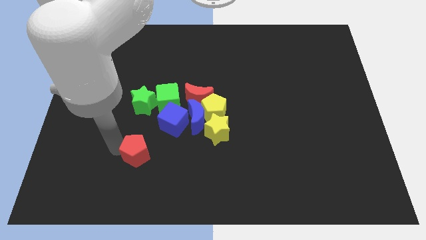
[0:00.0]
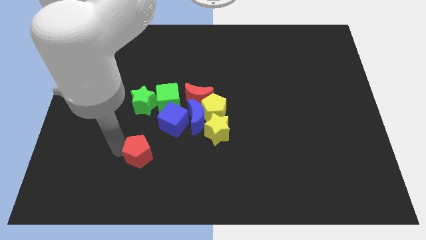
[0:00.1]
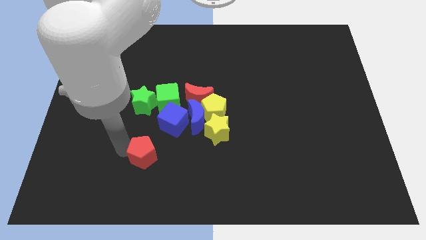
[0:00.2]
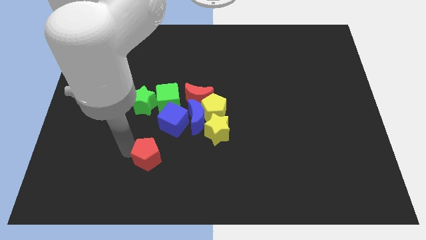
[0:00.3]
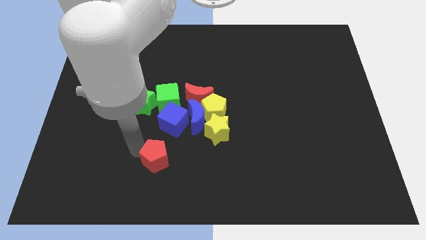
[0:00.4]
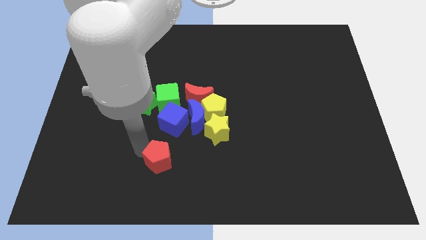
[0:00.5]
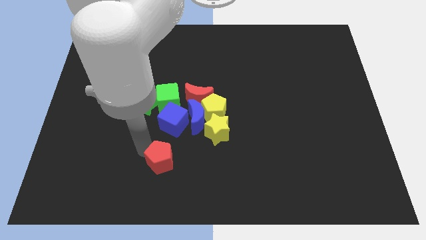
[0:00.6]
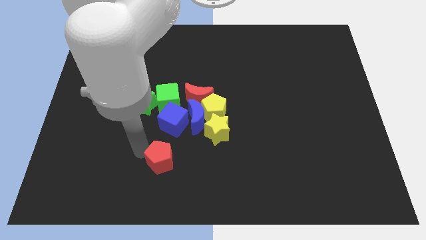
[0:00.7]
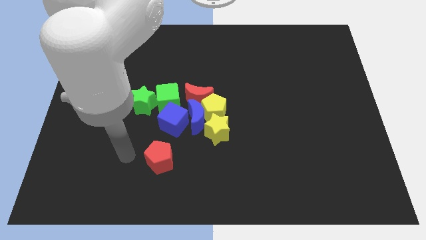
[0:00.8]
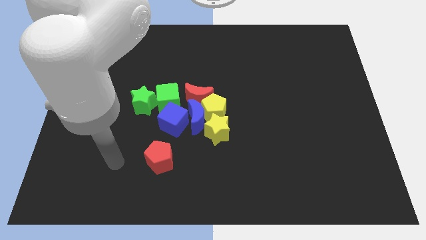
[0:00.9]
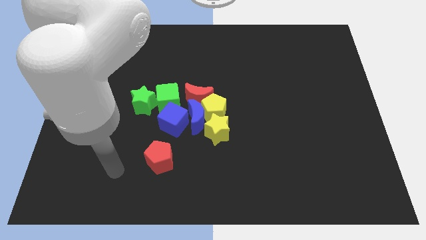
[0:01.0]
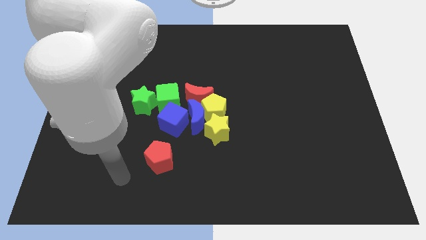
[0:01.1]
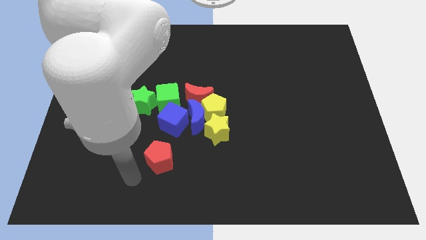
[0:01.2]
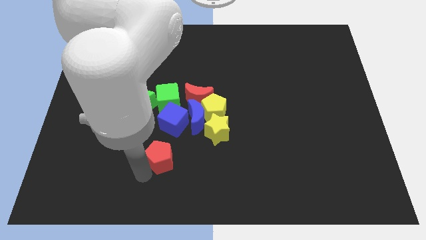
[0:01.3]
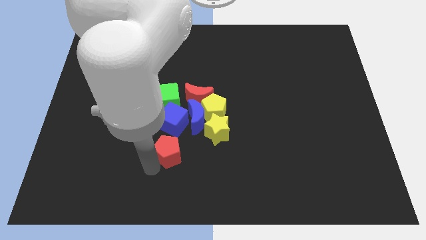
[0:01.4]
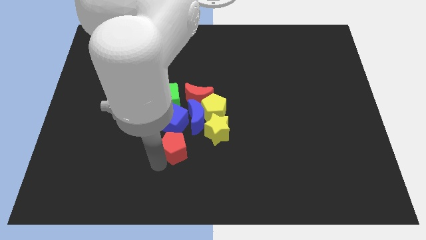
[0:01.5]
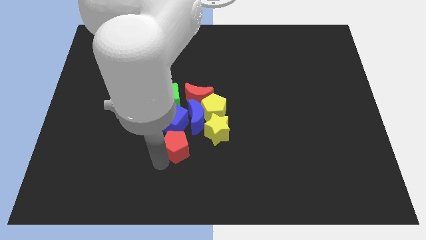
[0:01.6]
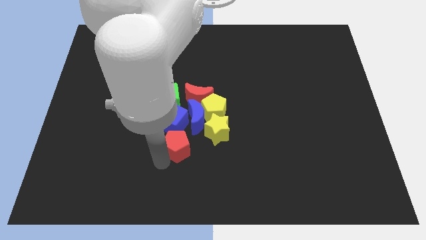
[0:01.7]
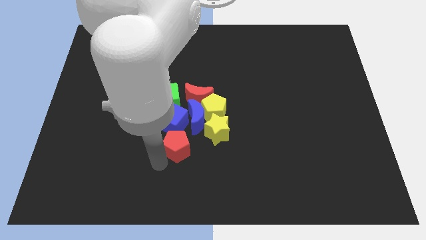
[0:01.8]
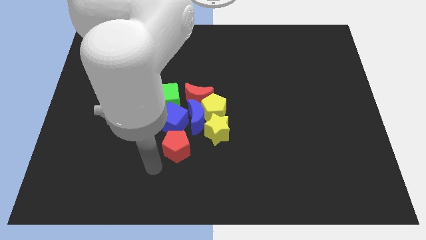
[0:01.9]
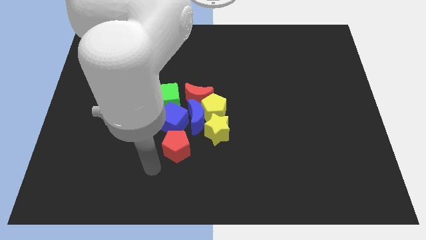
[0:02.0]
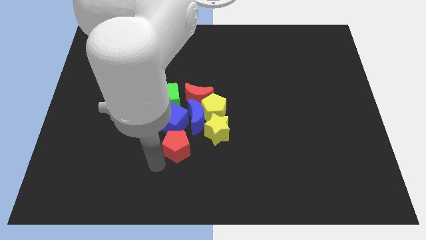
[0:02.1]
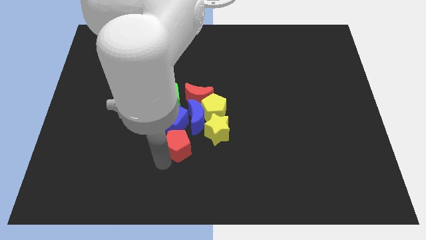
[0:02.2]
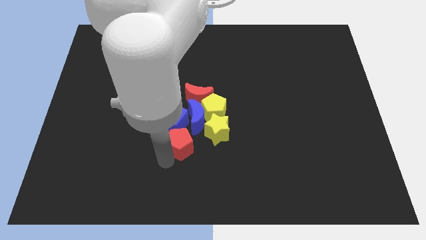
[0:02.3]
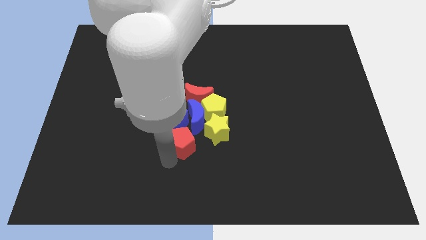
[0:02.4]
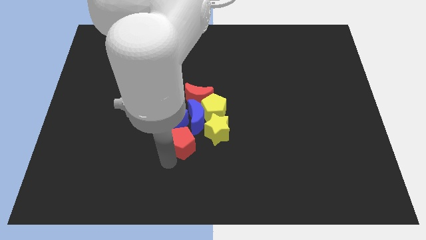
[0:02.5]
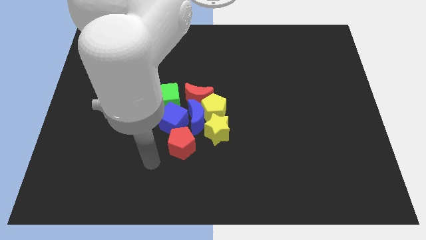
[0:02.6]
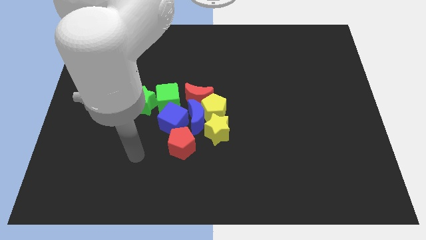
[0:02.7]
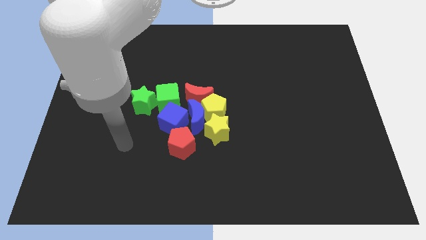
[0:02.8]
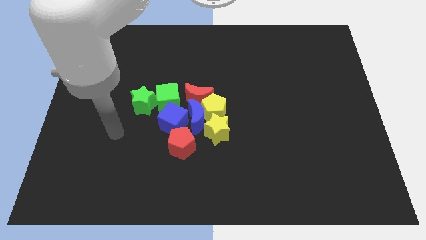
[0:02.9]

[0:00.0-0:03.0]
move the red pentagon to the bottom of the blue cube

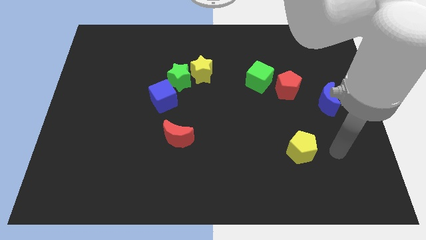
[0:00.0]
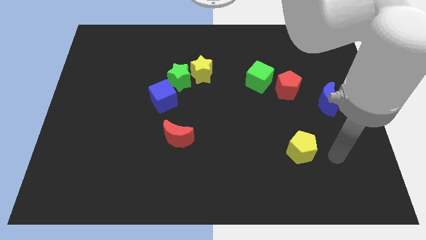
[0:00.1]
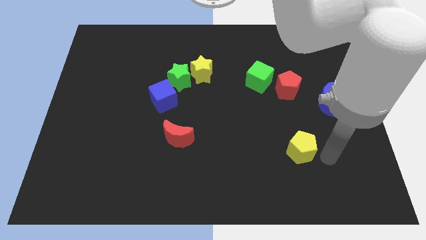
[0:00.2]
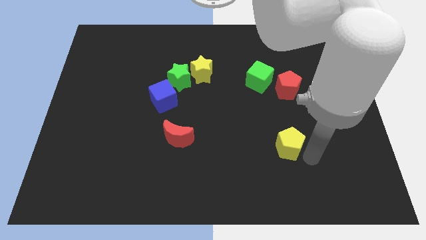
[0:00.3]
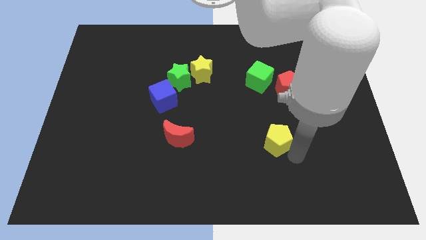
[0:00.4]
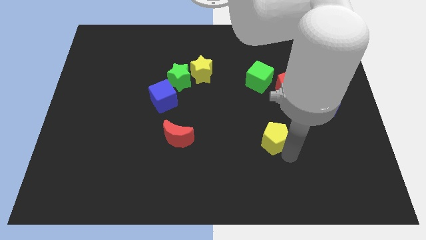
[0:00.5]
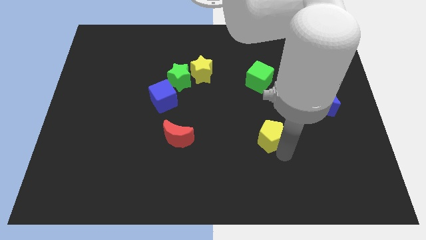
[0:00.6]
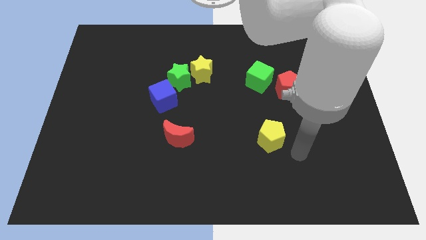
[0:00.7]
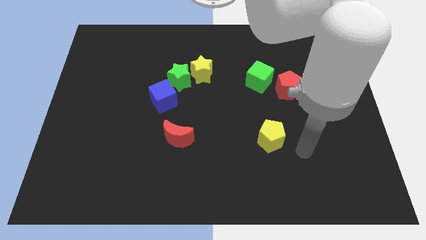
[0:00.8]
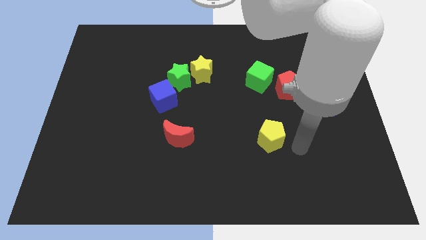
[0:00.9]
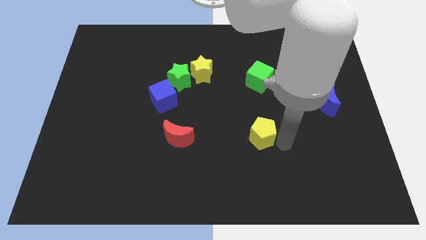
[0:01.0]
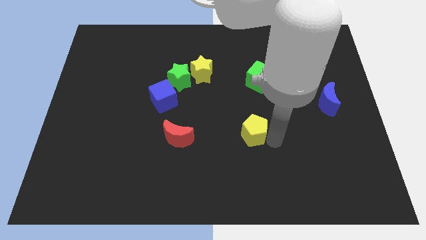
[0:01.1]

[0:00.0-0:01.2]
place yellow pentagon to the bottom of green cube

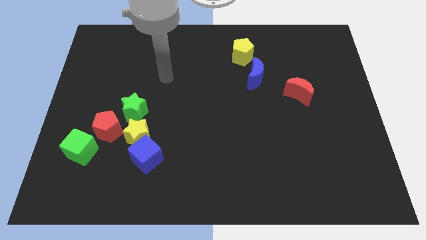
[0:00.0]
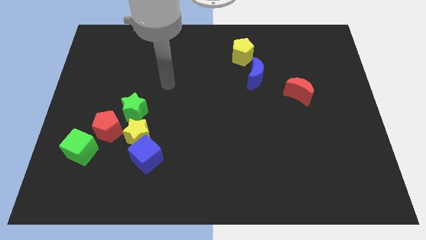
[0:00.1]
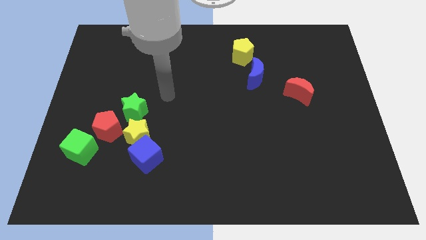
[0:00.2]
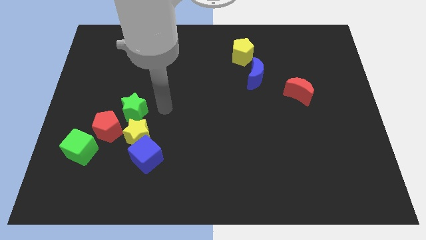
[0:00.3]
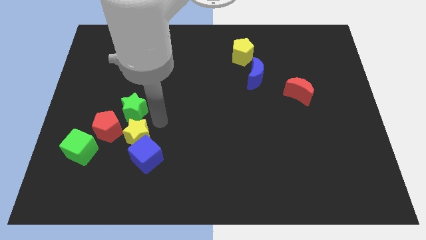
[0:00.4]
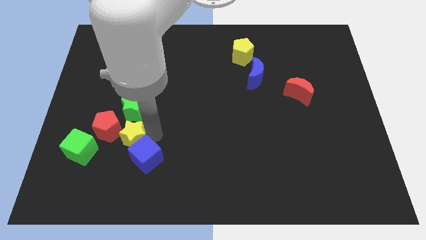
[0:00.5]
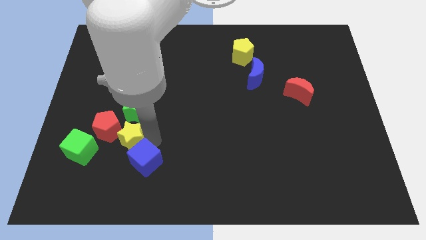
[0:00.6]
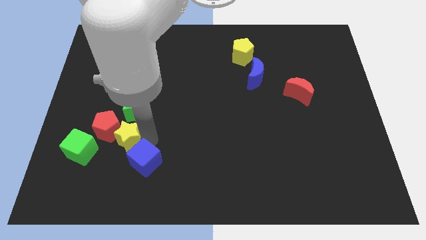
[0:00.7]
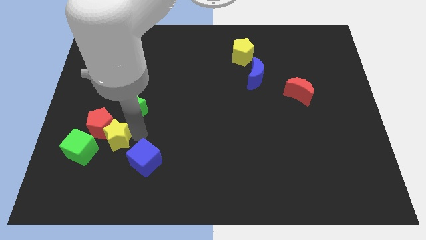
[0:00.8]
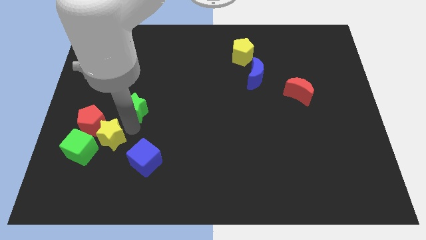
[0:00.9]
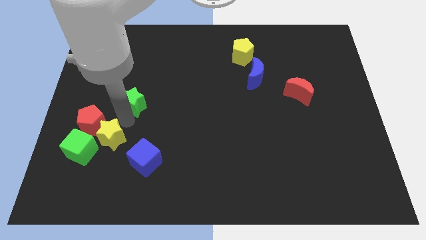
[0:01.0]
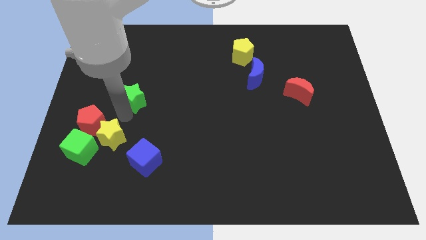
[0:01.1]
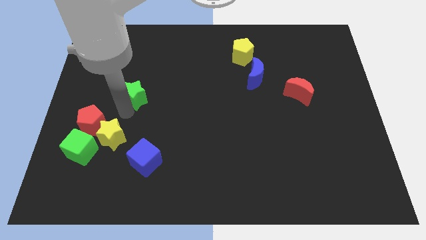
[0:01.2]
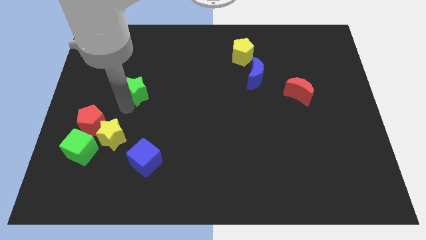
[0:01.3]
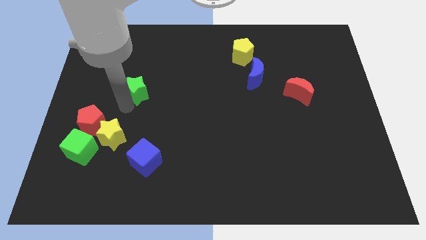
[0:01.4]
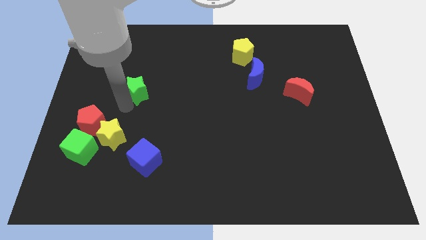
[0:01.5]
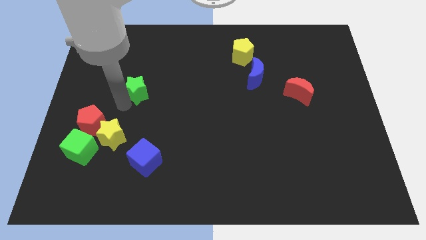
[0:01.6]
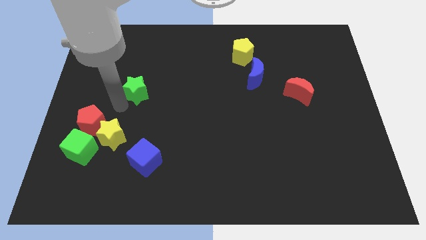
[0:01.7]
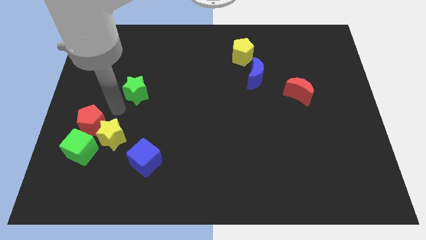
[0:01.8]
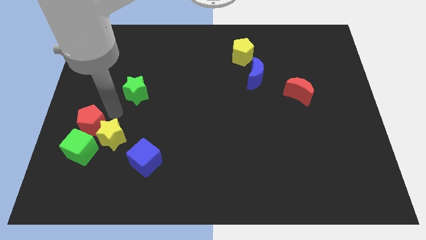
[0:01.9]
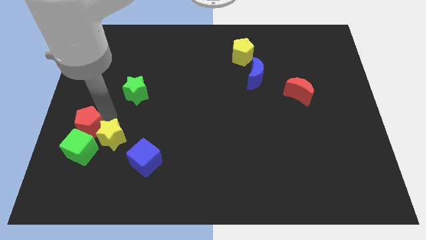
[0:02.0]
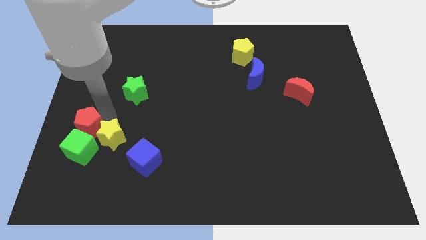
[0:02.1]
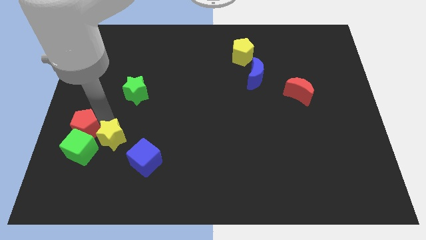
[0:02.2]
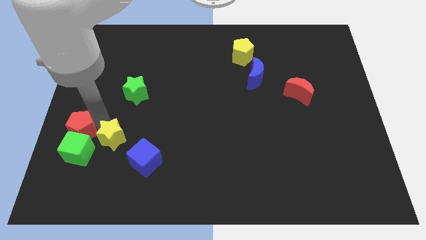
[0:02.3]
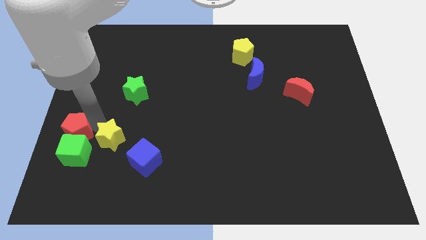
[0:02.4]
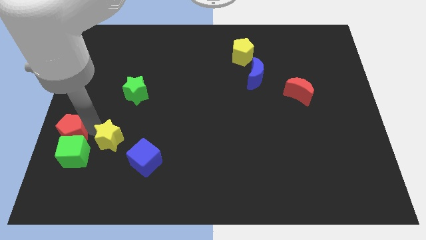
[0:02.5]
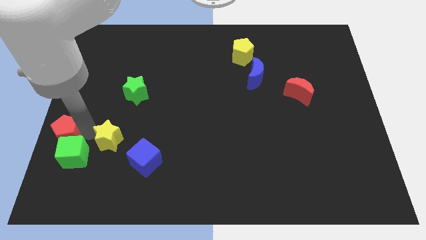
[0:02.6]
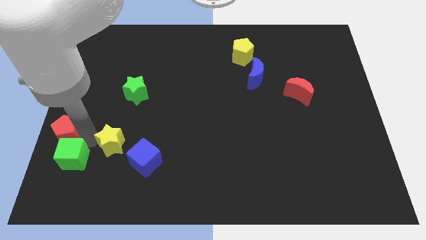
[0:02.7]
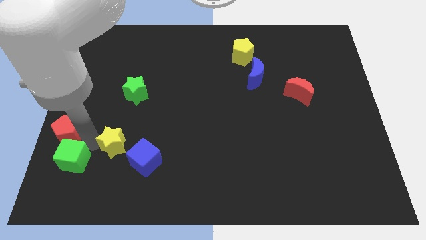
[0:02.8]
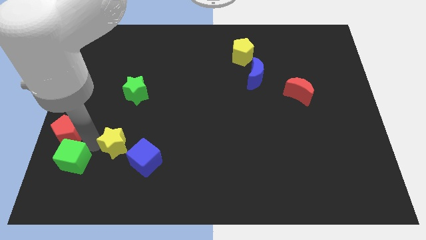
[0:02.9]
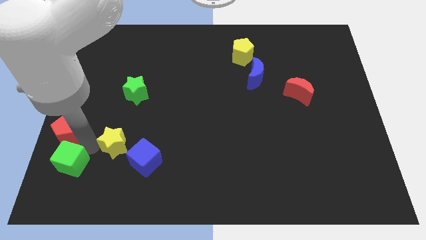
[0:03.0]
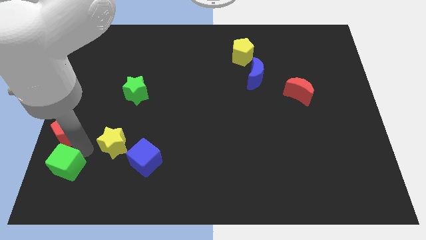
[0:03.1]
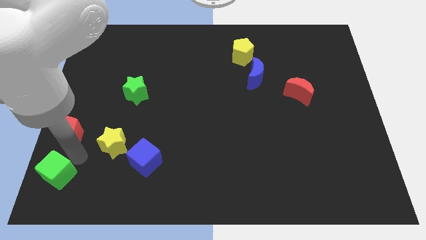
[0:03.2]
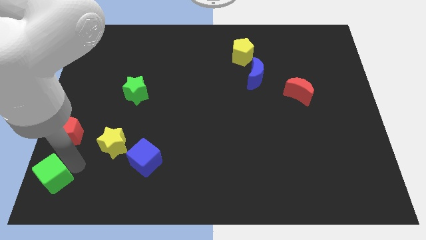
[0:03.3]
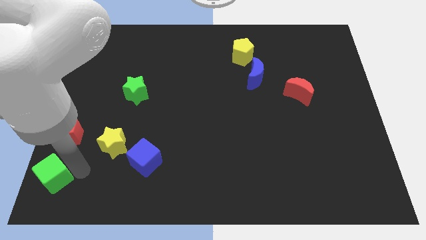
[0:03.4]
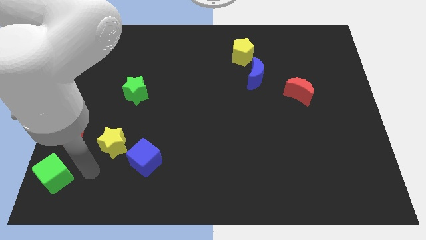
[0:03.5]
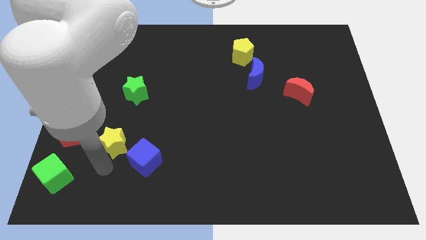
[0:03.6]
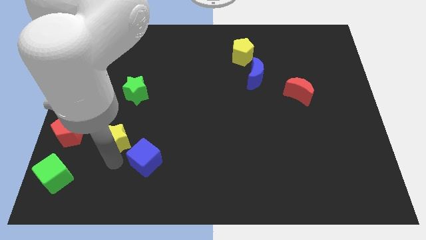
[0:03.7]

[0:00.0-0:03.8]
separate the green blocks and the red pentagon from the yellow star

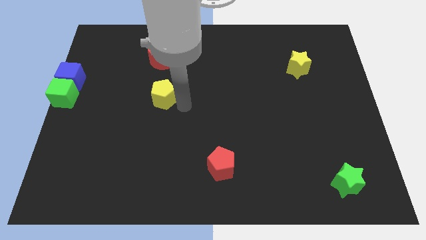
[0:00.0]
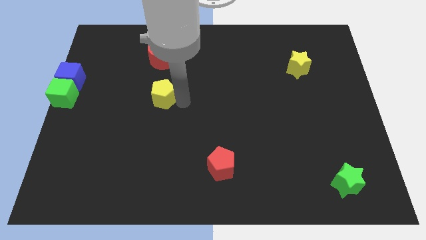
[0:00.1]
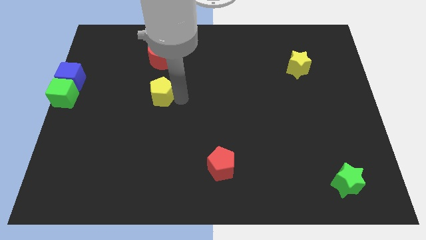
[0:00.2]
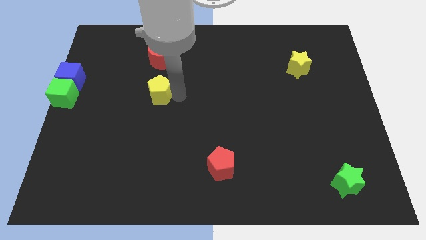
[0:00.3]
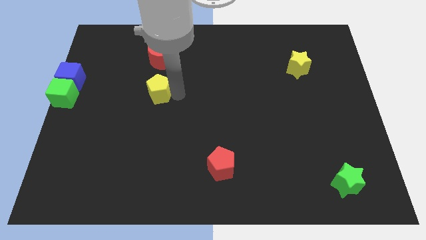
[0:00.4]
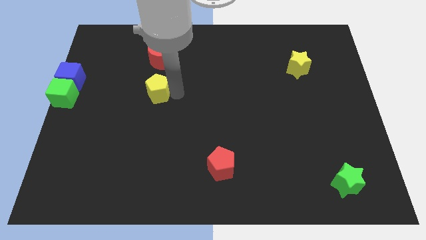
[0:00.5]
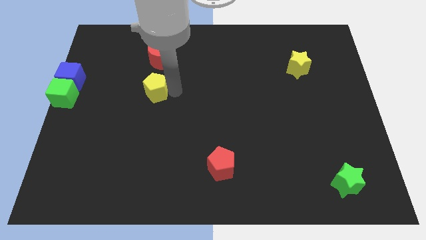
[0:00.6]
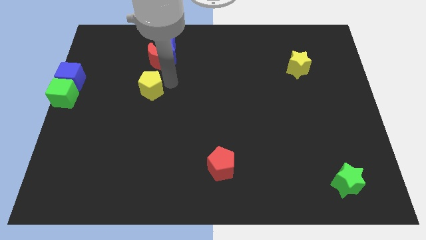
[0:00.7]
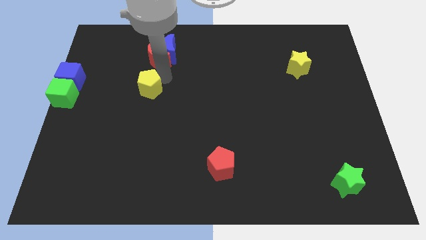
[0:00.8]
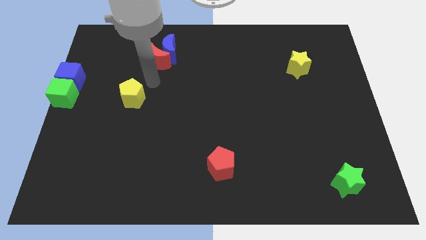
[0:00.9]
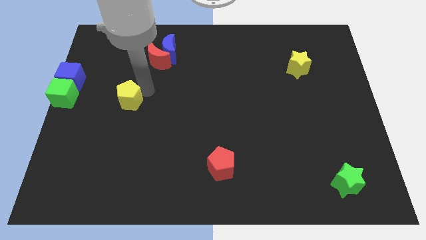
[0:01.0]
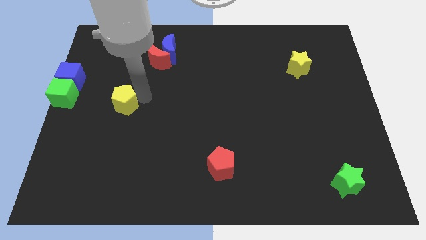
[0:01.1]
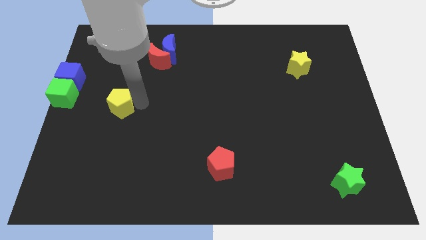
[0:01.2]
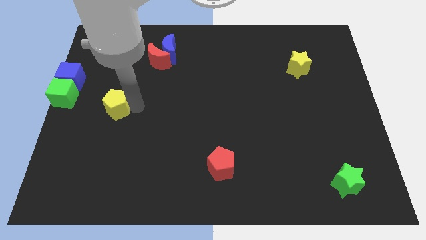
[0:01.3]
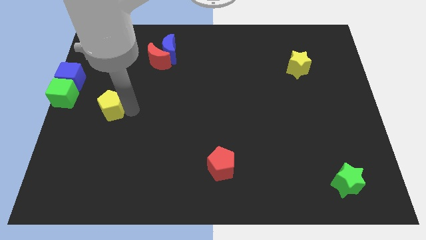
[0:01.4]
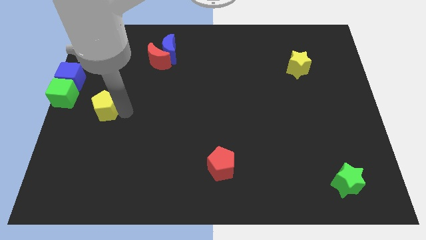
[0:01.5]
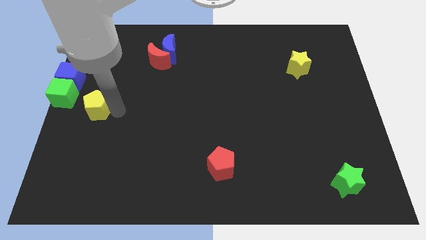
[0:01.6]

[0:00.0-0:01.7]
move yellow pentagon towards left
